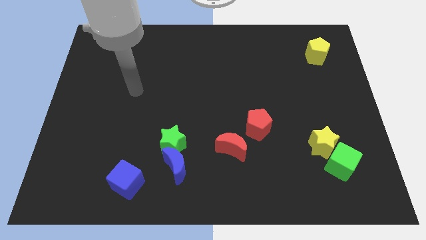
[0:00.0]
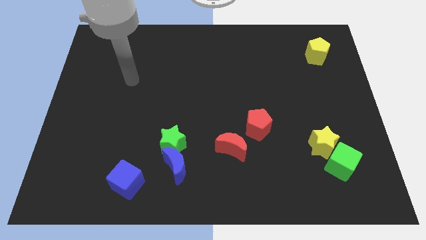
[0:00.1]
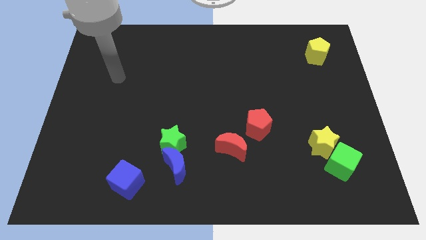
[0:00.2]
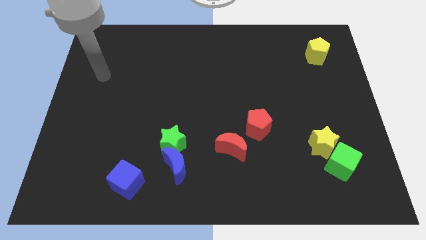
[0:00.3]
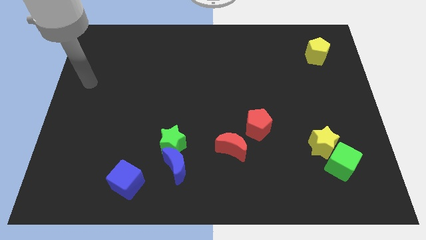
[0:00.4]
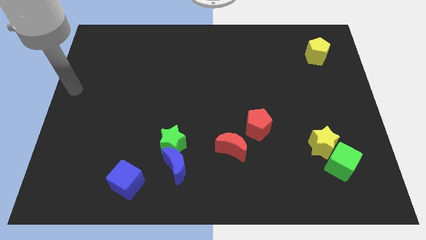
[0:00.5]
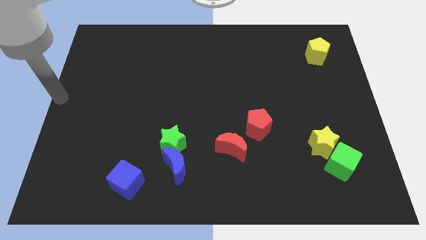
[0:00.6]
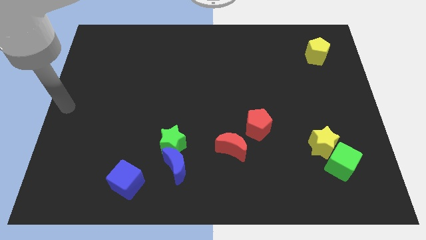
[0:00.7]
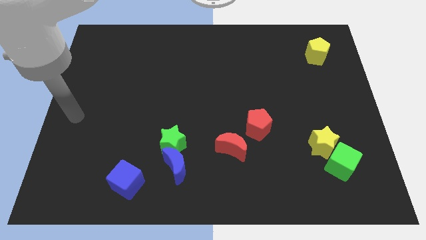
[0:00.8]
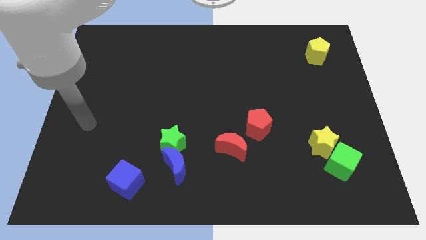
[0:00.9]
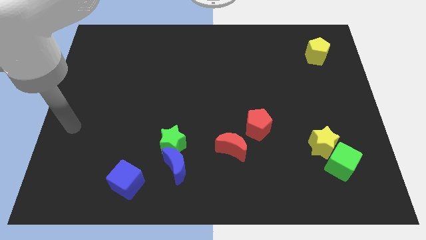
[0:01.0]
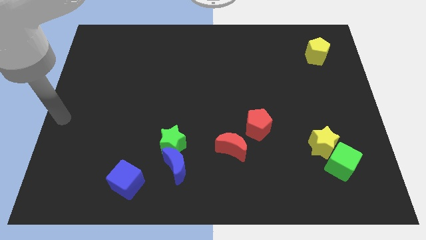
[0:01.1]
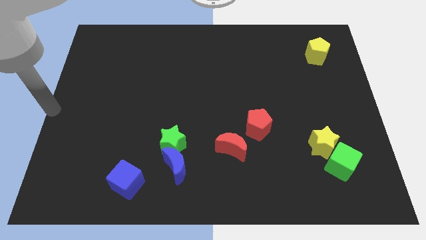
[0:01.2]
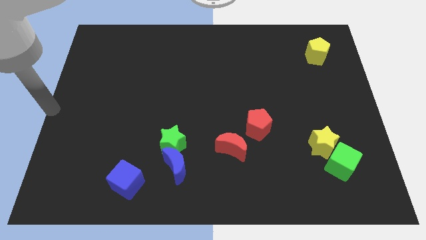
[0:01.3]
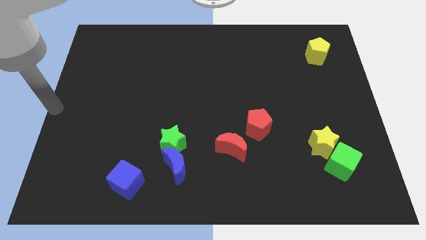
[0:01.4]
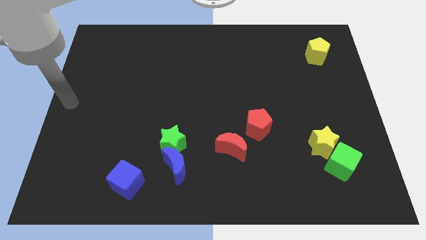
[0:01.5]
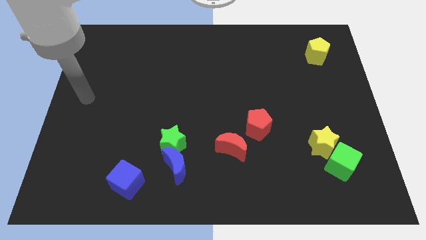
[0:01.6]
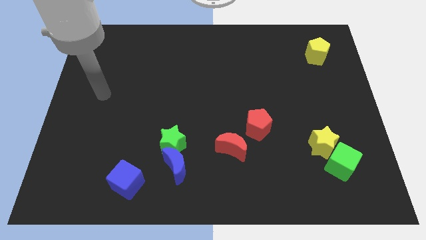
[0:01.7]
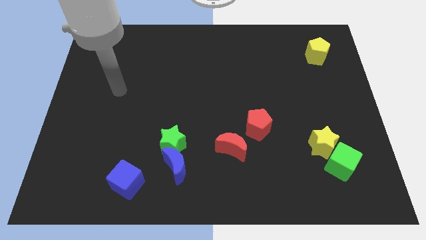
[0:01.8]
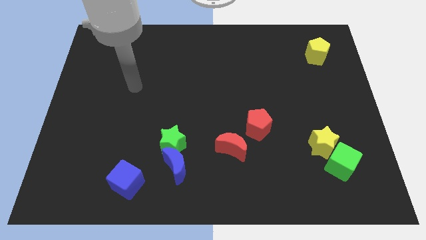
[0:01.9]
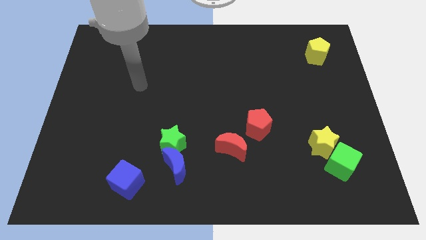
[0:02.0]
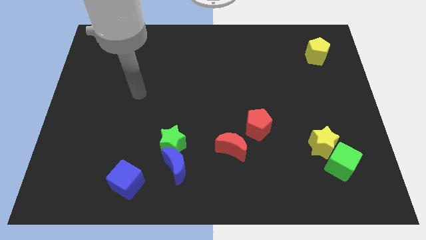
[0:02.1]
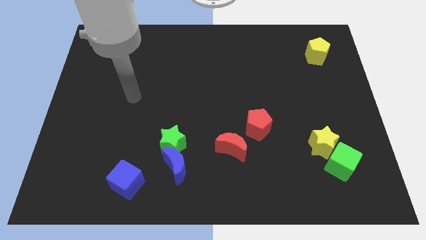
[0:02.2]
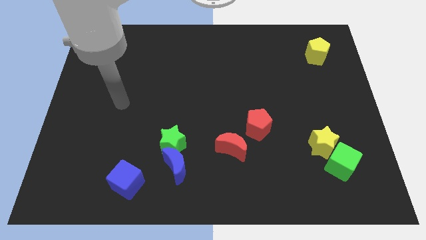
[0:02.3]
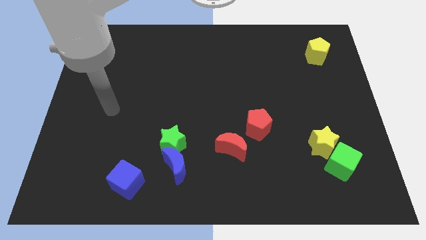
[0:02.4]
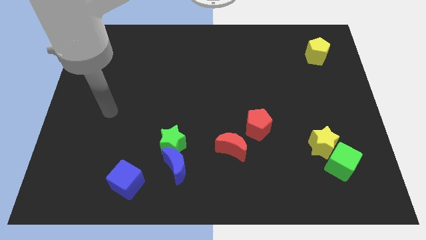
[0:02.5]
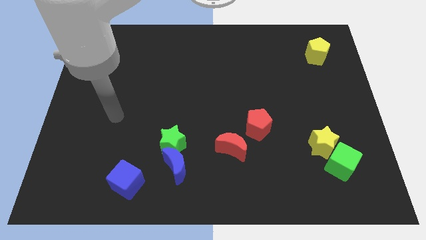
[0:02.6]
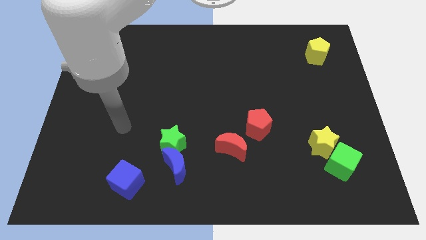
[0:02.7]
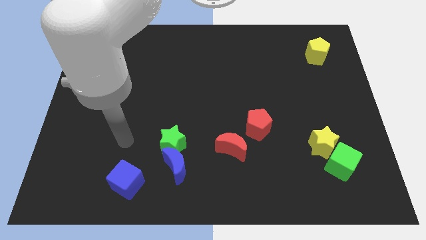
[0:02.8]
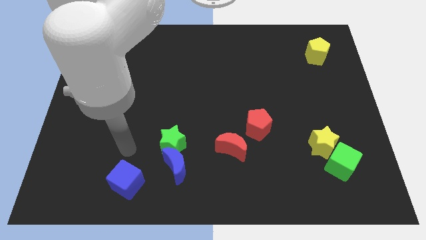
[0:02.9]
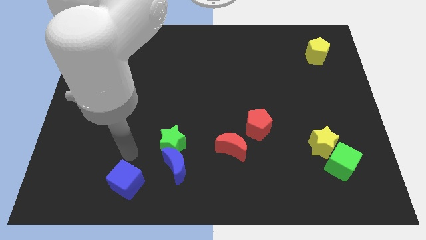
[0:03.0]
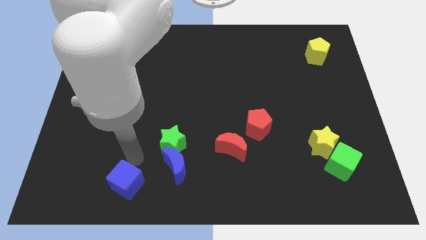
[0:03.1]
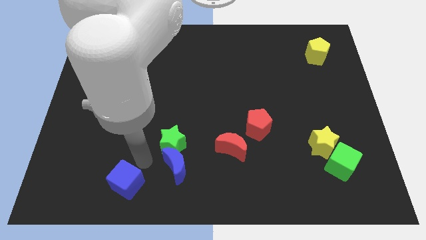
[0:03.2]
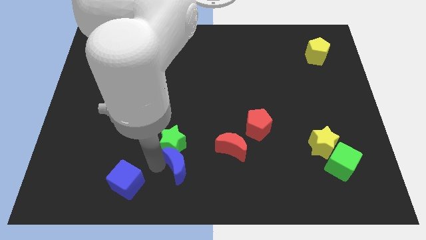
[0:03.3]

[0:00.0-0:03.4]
move your arm towards the blue crescent

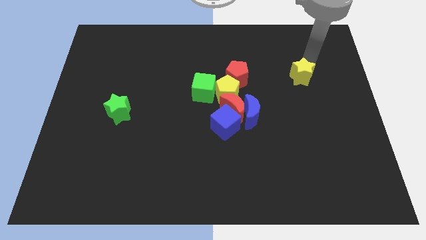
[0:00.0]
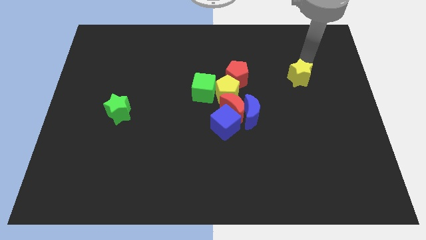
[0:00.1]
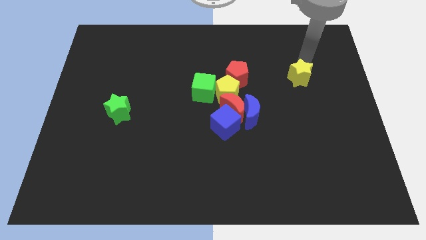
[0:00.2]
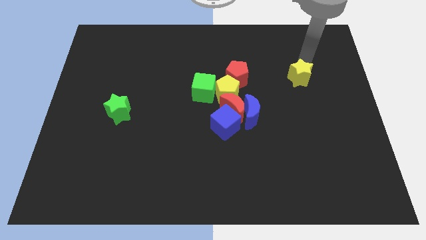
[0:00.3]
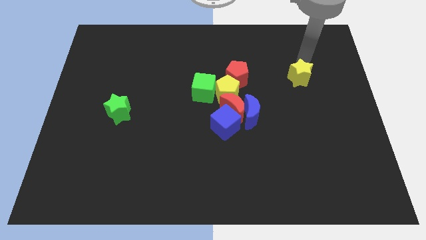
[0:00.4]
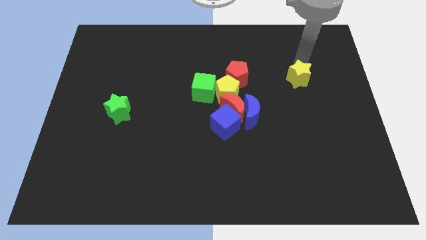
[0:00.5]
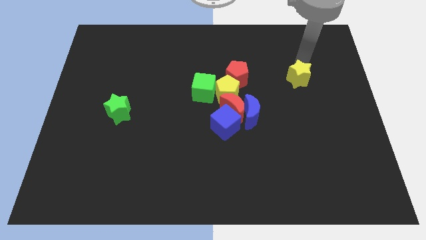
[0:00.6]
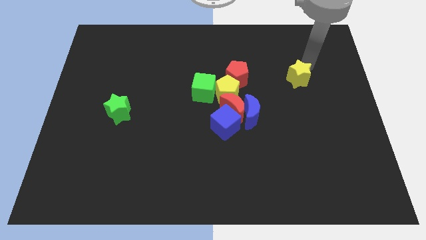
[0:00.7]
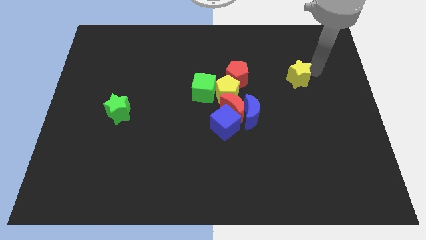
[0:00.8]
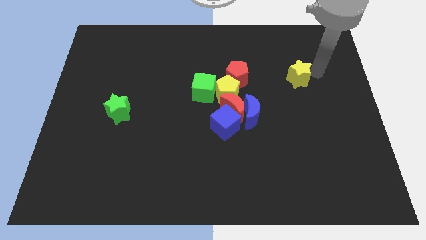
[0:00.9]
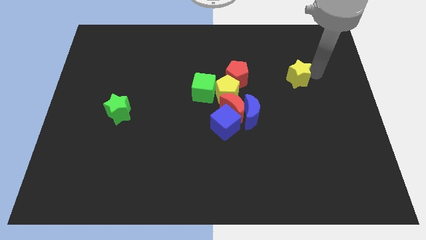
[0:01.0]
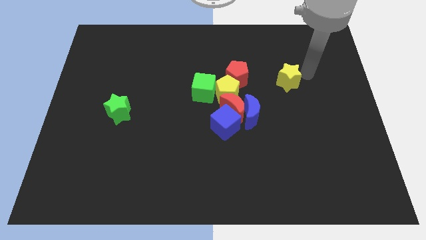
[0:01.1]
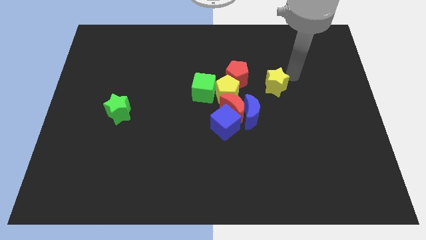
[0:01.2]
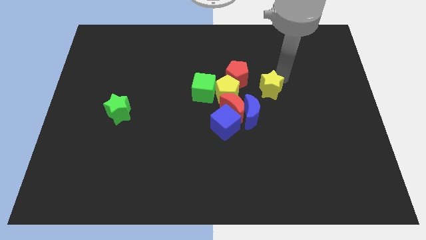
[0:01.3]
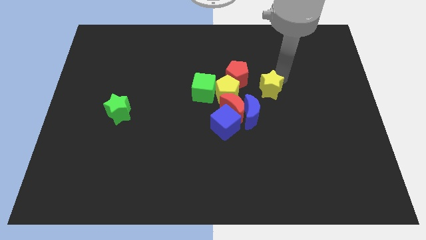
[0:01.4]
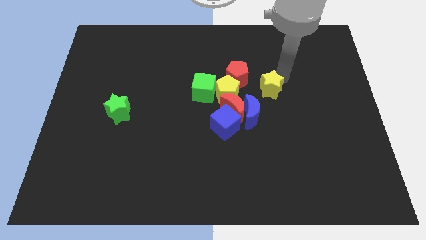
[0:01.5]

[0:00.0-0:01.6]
push the yellow star towards the group of blocks

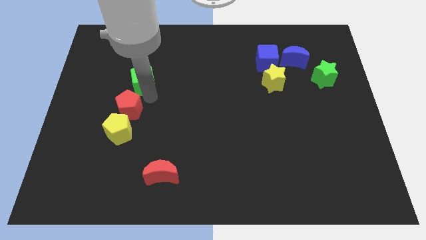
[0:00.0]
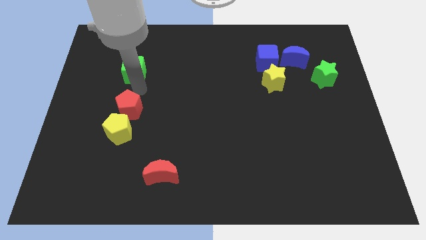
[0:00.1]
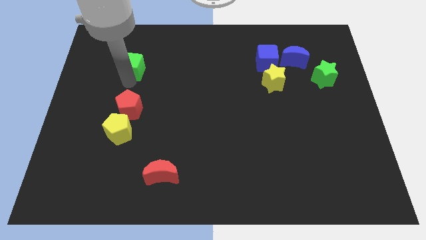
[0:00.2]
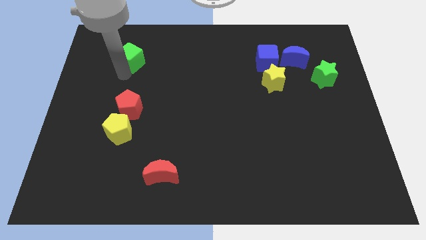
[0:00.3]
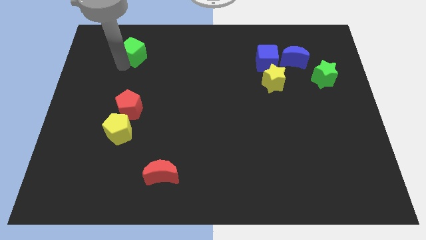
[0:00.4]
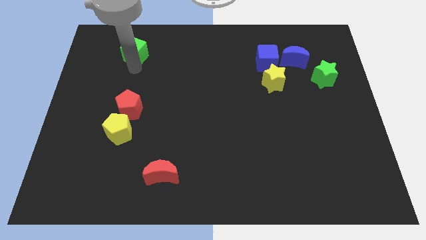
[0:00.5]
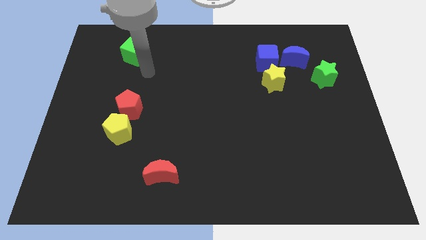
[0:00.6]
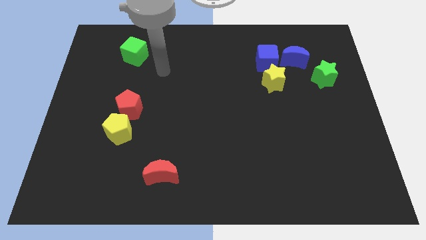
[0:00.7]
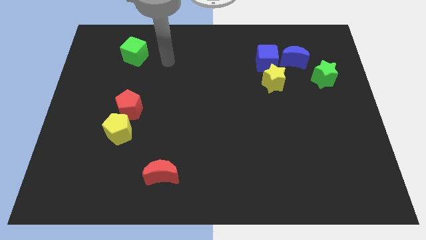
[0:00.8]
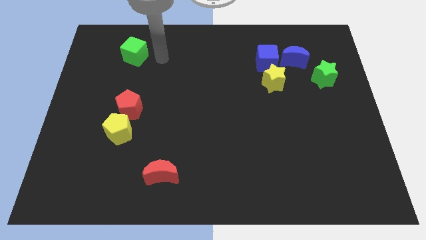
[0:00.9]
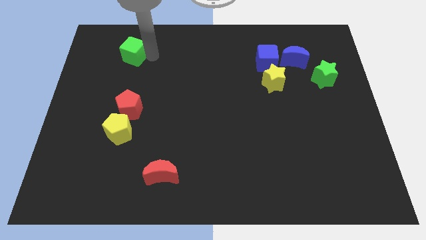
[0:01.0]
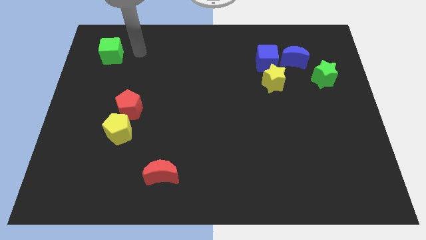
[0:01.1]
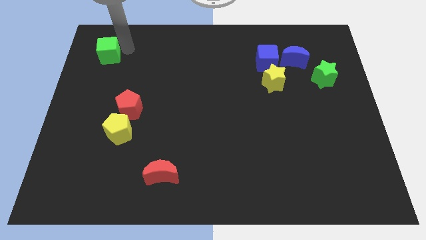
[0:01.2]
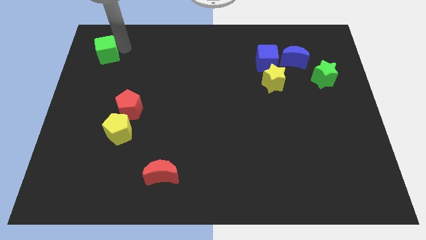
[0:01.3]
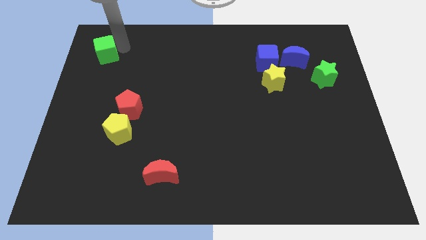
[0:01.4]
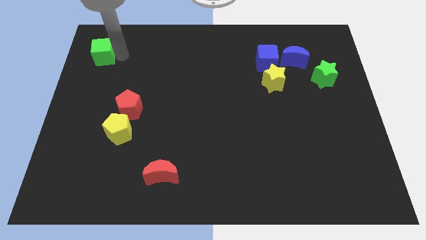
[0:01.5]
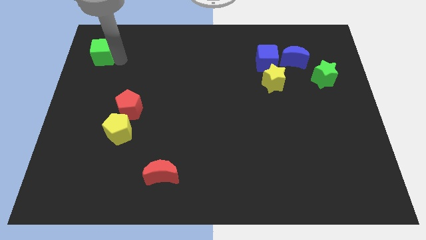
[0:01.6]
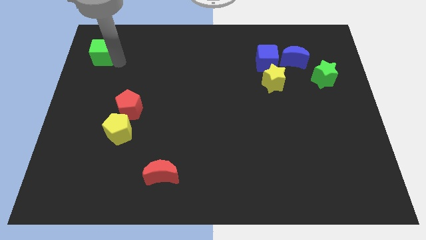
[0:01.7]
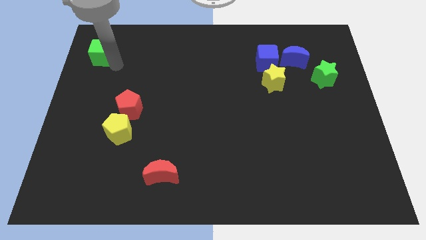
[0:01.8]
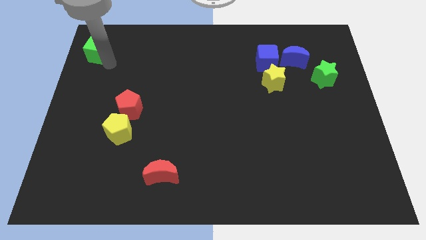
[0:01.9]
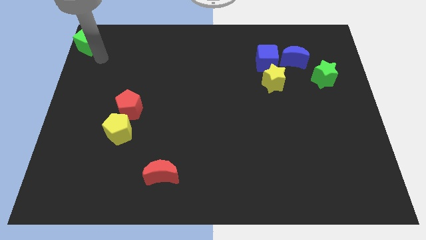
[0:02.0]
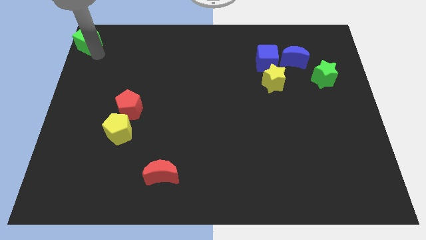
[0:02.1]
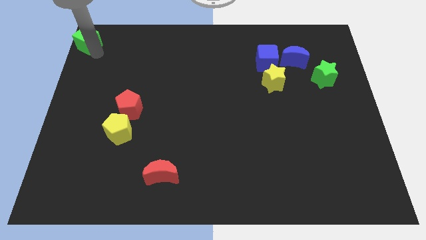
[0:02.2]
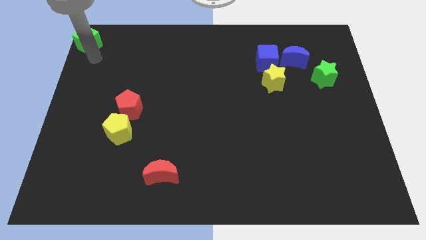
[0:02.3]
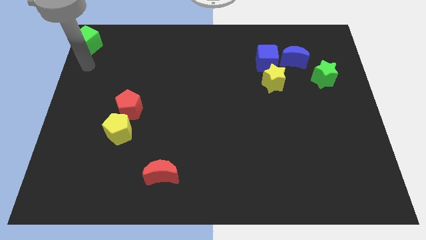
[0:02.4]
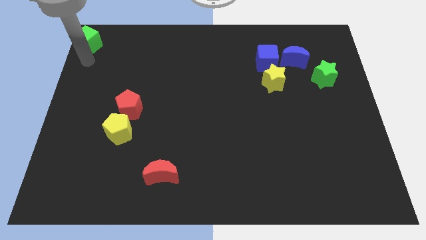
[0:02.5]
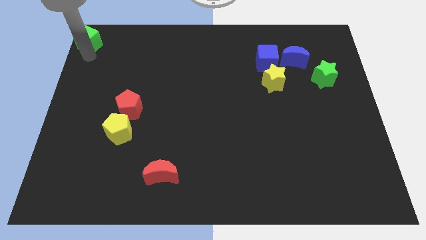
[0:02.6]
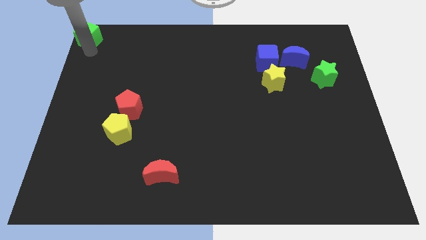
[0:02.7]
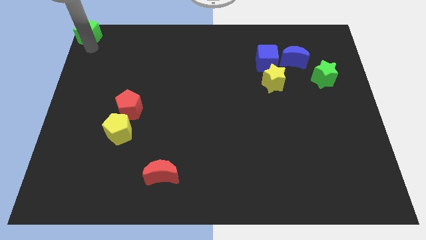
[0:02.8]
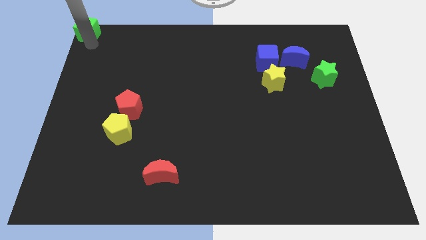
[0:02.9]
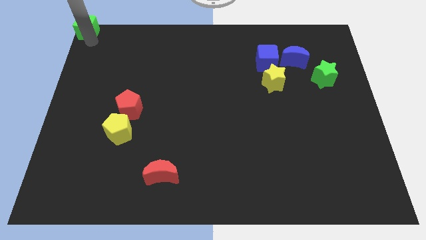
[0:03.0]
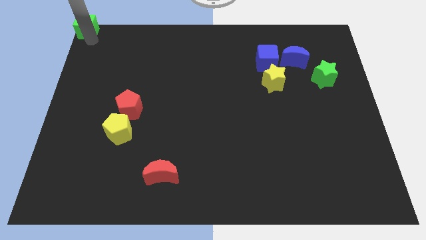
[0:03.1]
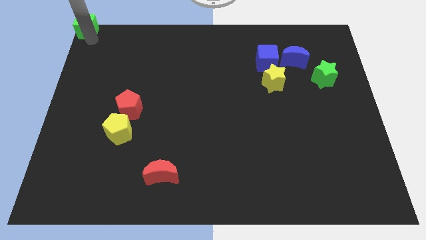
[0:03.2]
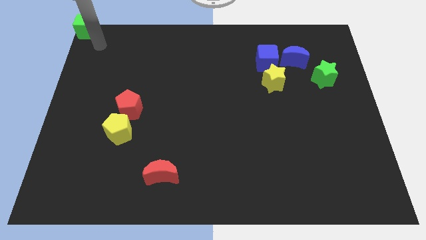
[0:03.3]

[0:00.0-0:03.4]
push the green cube to the top left corner of the board

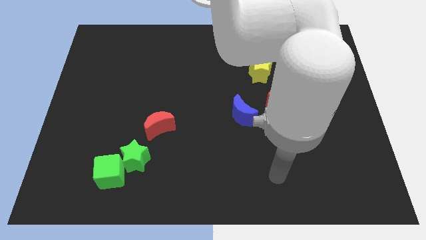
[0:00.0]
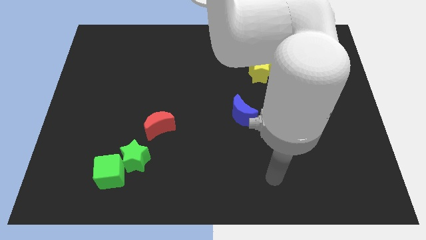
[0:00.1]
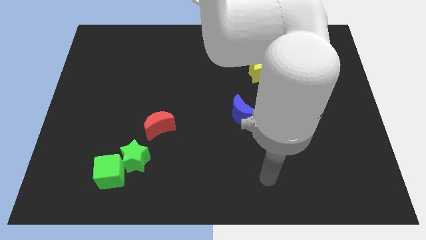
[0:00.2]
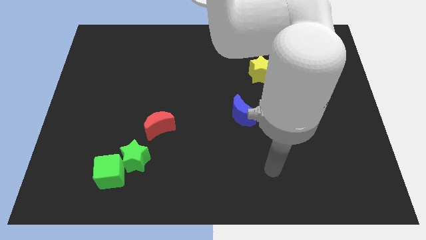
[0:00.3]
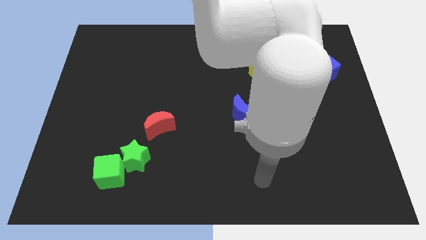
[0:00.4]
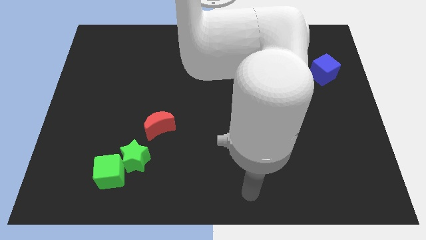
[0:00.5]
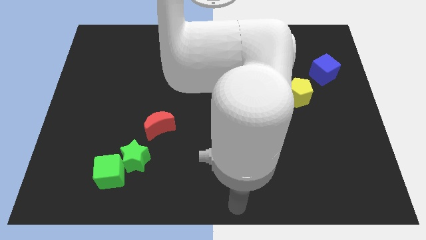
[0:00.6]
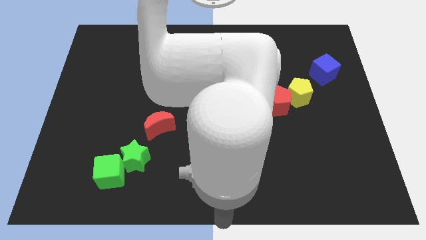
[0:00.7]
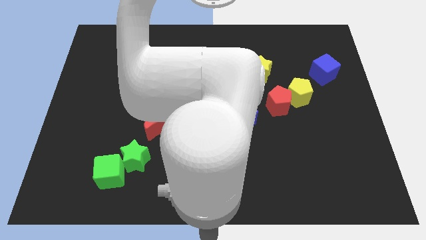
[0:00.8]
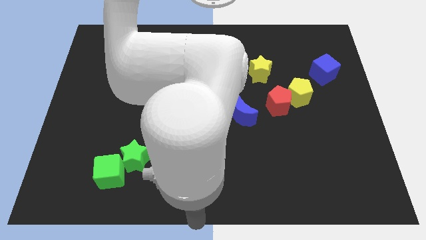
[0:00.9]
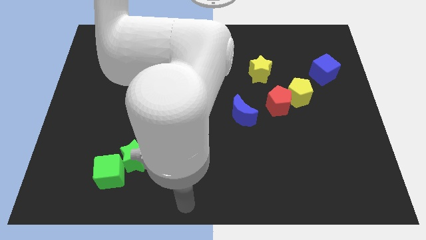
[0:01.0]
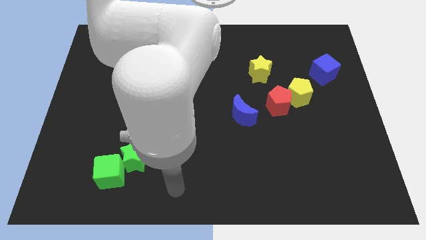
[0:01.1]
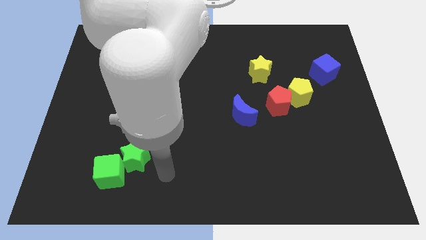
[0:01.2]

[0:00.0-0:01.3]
point your arm at the right of the green star
